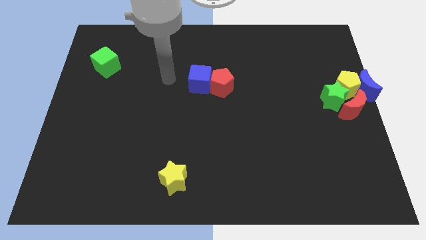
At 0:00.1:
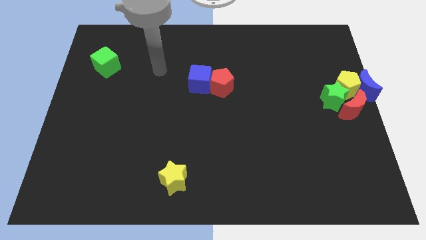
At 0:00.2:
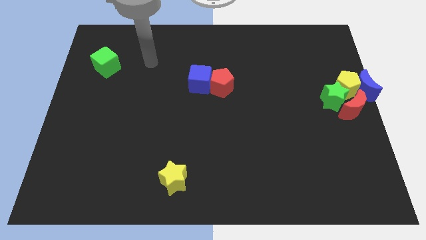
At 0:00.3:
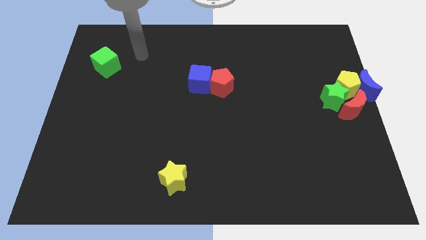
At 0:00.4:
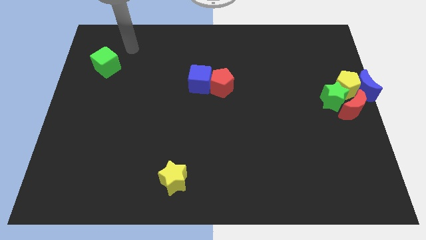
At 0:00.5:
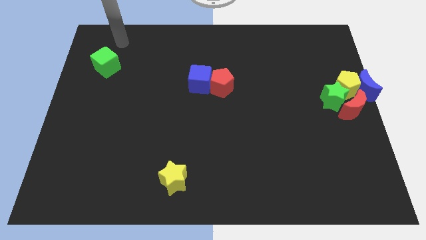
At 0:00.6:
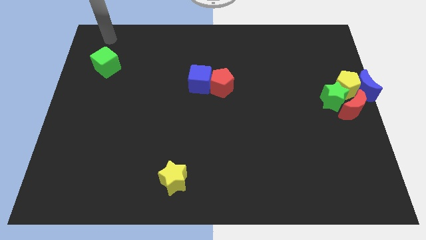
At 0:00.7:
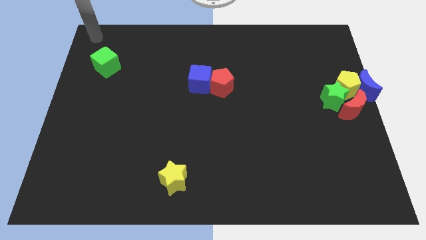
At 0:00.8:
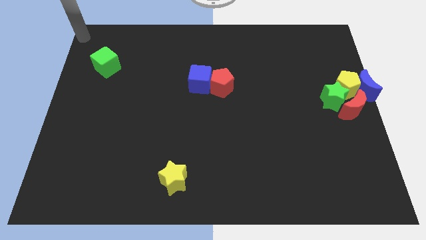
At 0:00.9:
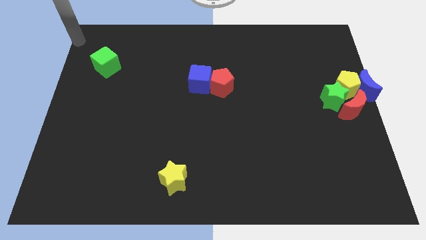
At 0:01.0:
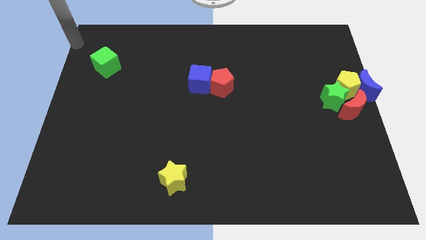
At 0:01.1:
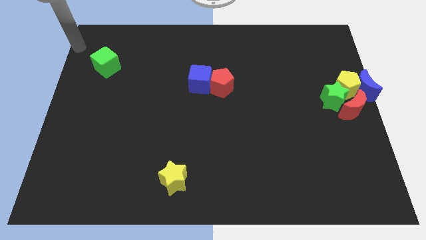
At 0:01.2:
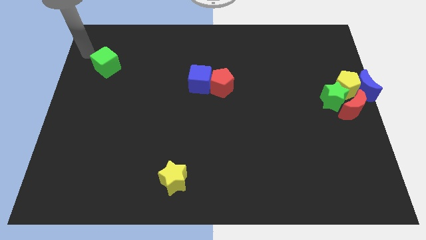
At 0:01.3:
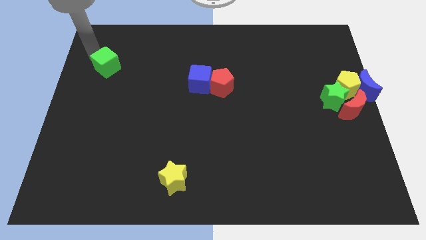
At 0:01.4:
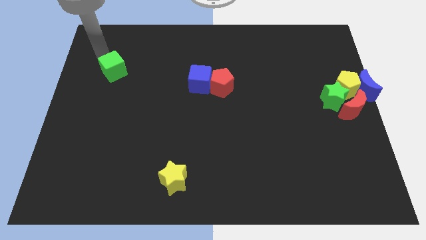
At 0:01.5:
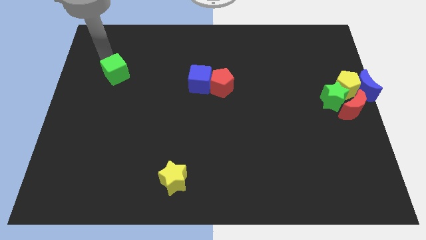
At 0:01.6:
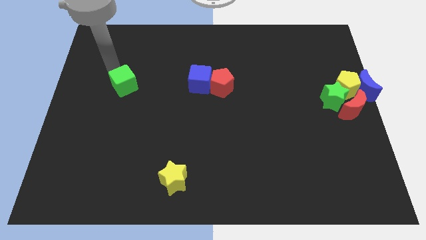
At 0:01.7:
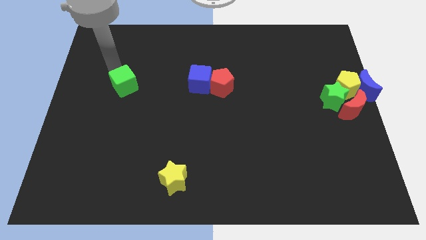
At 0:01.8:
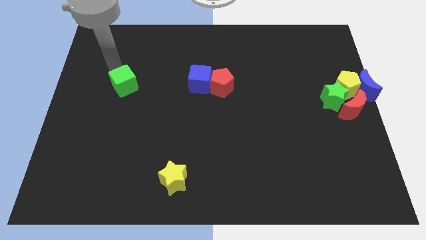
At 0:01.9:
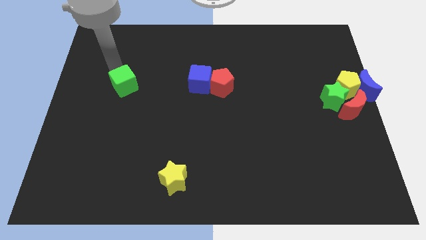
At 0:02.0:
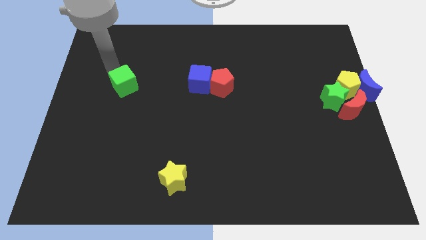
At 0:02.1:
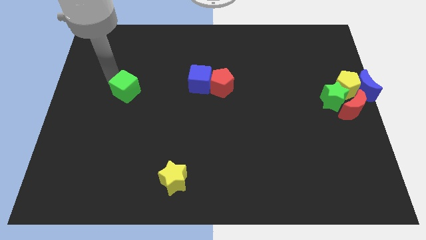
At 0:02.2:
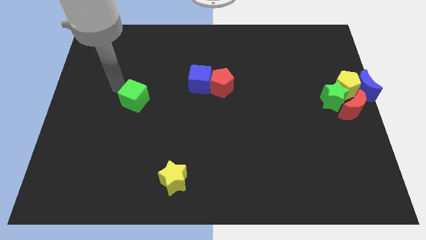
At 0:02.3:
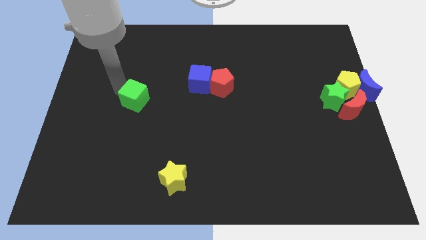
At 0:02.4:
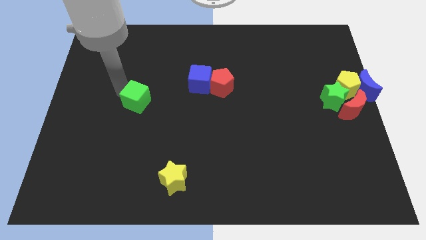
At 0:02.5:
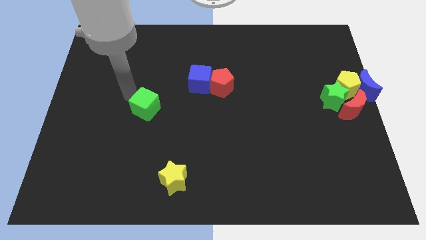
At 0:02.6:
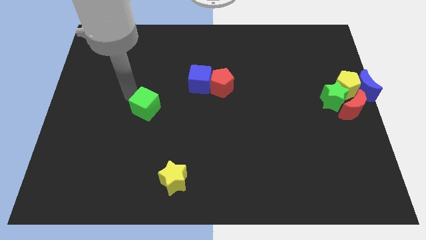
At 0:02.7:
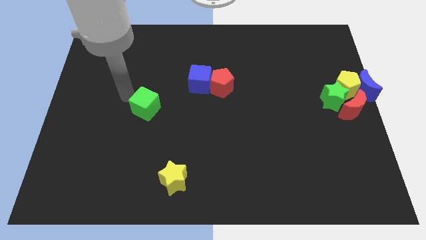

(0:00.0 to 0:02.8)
move the green cube diagonol to the blue cube

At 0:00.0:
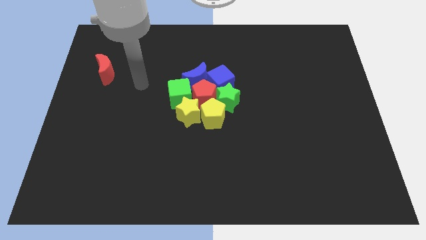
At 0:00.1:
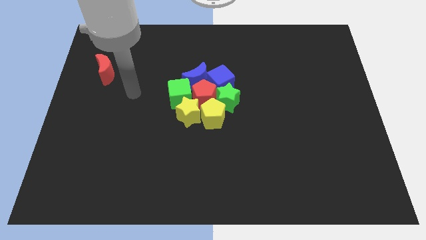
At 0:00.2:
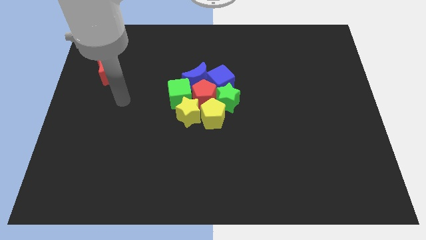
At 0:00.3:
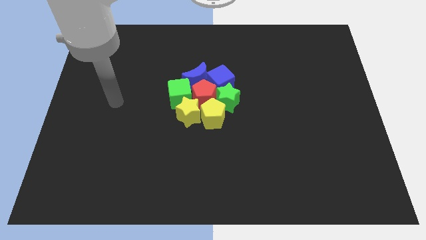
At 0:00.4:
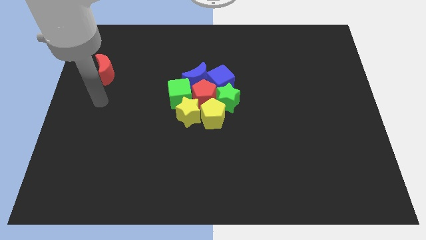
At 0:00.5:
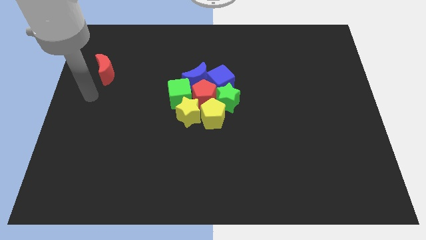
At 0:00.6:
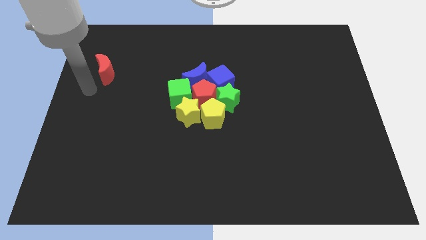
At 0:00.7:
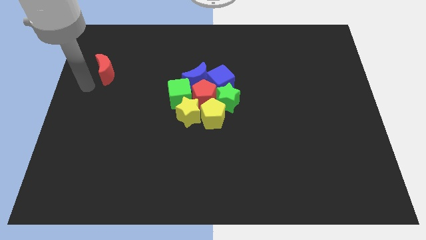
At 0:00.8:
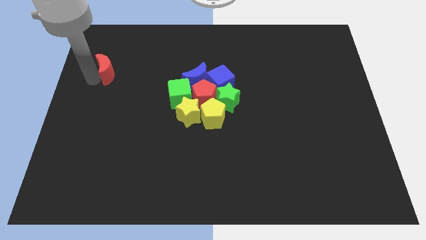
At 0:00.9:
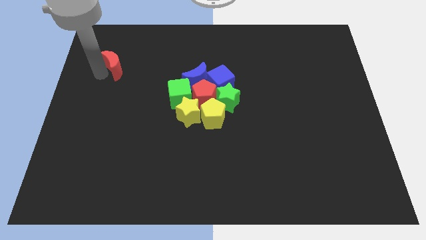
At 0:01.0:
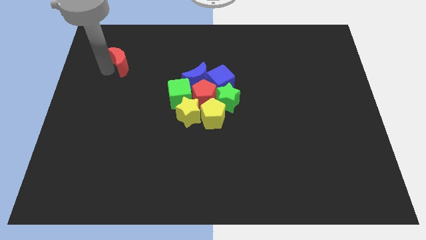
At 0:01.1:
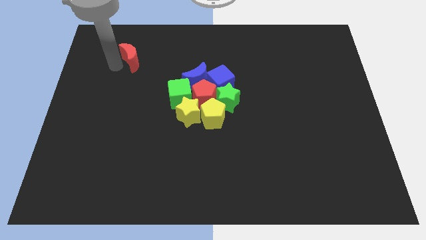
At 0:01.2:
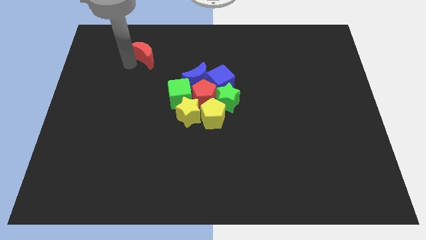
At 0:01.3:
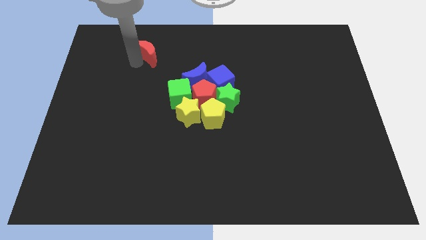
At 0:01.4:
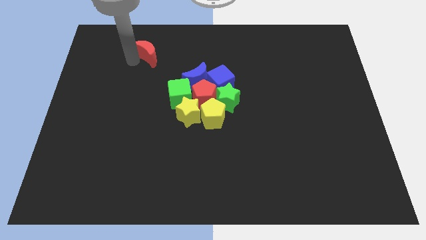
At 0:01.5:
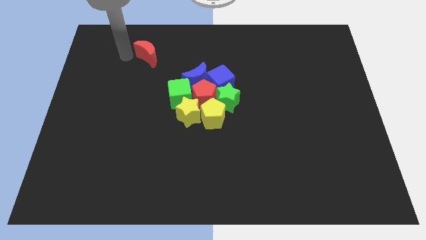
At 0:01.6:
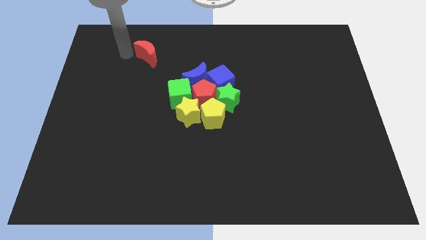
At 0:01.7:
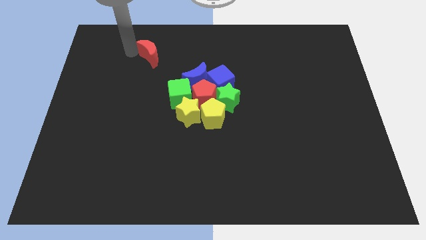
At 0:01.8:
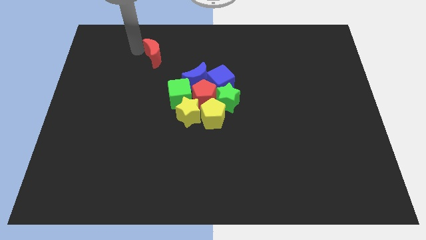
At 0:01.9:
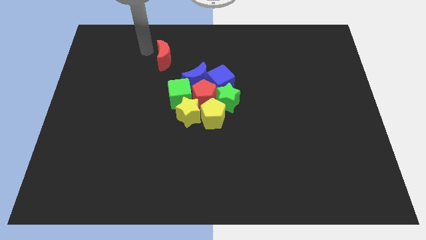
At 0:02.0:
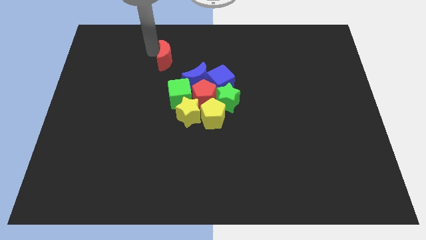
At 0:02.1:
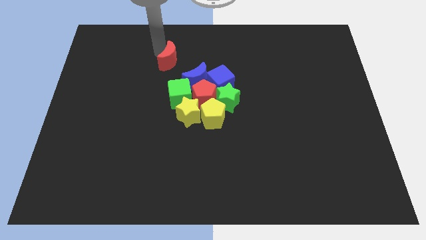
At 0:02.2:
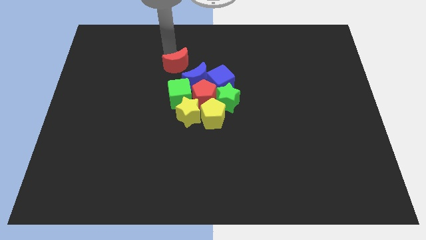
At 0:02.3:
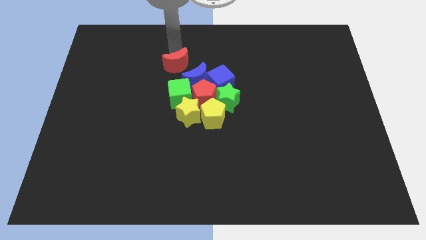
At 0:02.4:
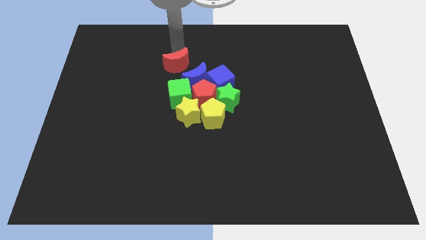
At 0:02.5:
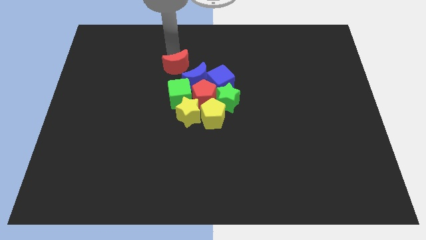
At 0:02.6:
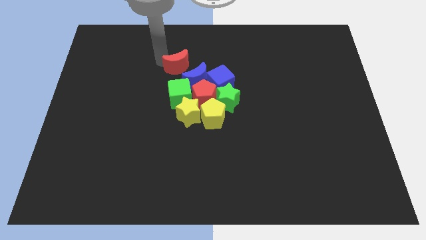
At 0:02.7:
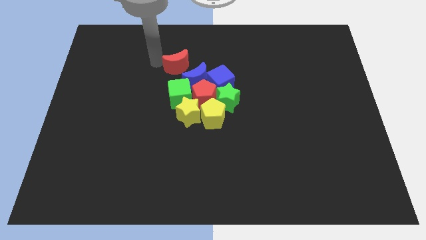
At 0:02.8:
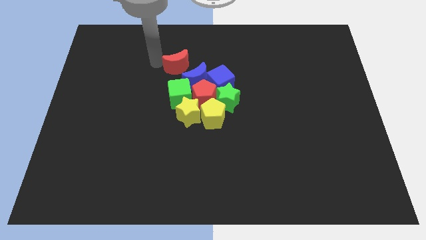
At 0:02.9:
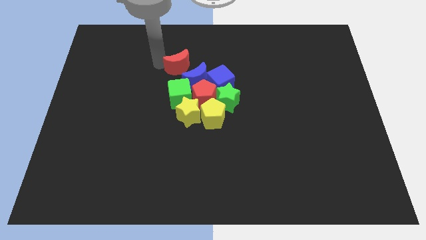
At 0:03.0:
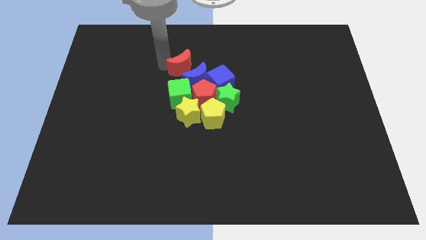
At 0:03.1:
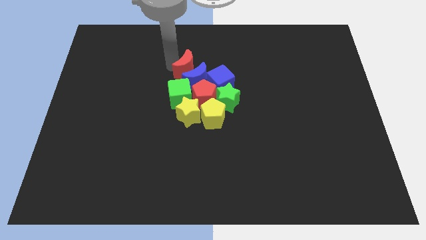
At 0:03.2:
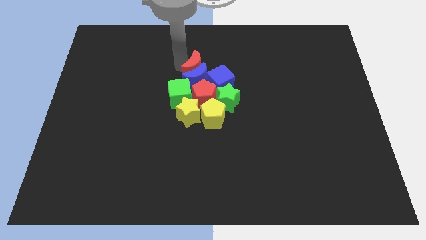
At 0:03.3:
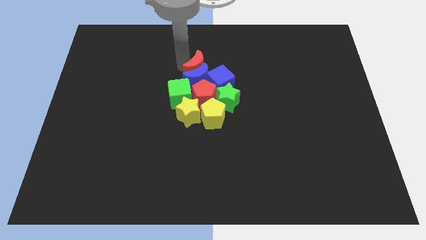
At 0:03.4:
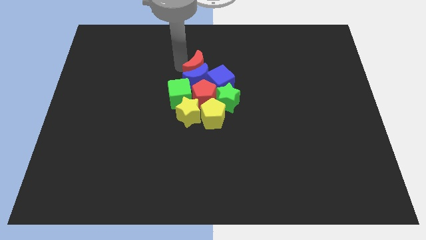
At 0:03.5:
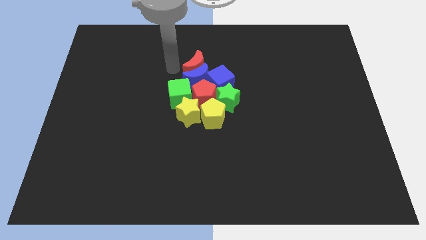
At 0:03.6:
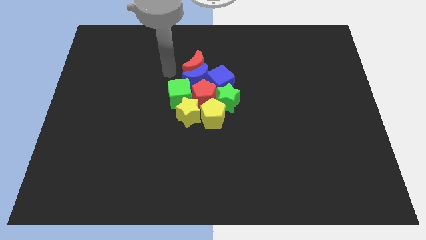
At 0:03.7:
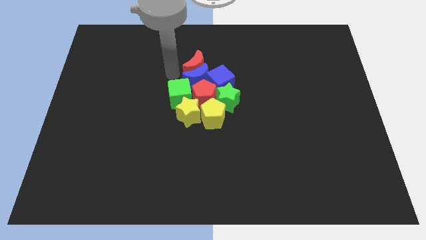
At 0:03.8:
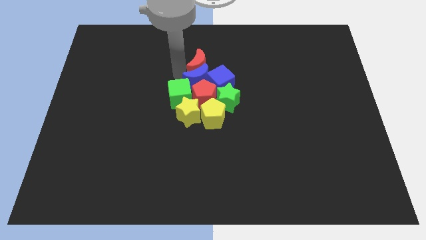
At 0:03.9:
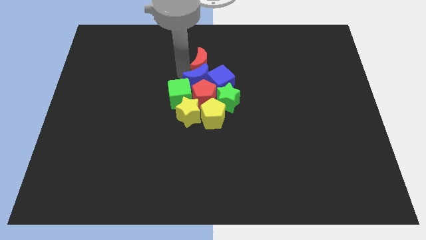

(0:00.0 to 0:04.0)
put the red moon above the blue moon

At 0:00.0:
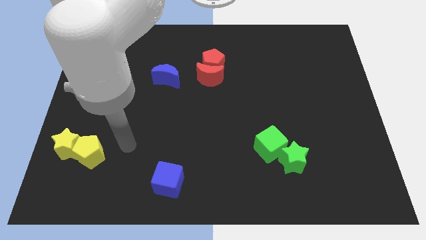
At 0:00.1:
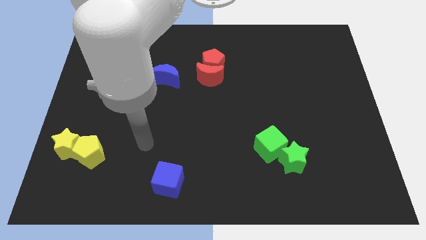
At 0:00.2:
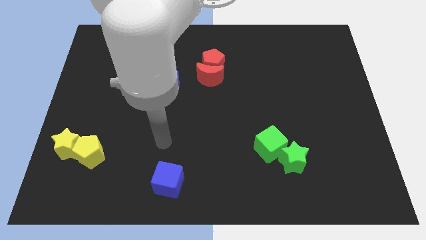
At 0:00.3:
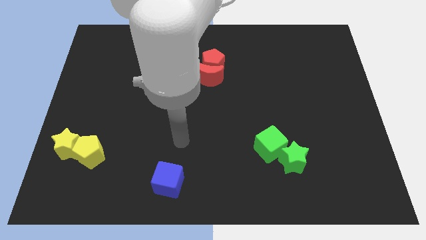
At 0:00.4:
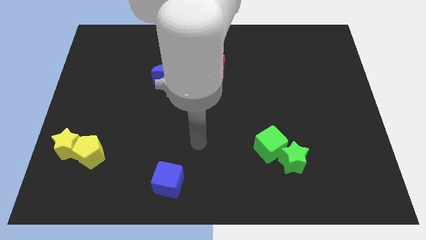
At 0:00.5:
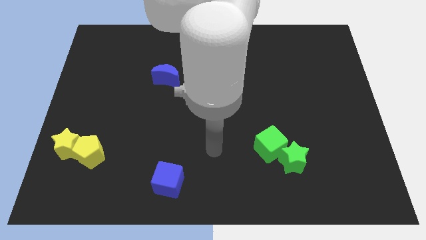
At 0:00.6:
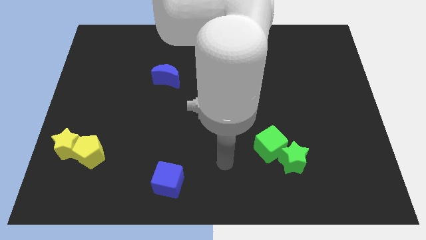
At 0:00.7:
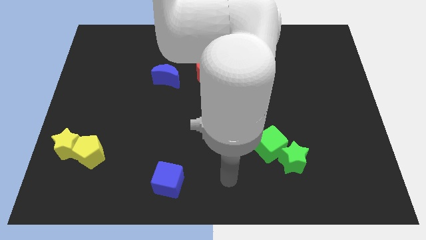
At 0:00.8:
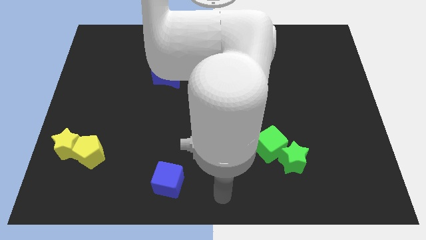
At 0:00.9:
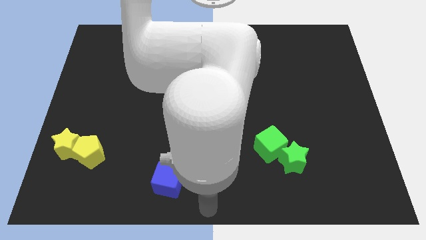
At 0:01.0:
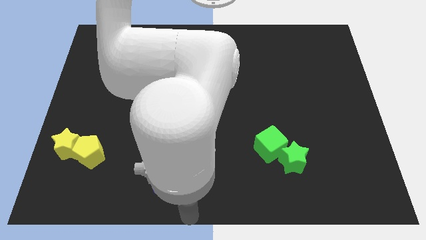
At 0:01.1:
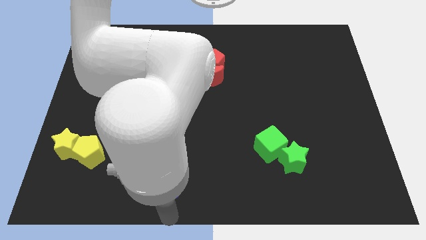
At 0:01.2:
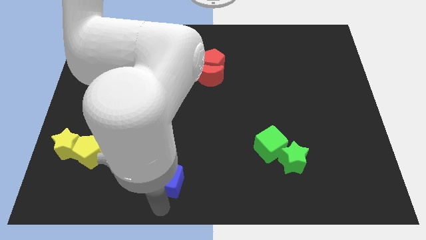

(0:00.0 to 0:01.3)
move your arm to the bottom side of the blue cube

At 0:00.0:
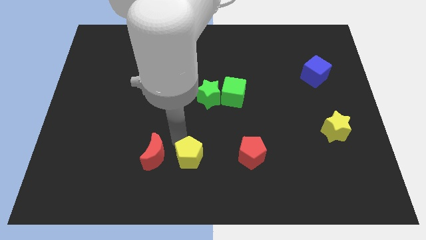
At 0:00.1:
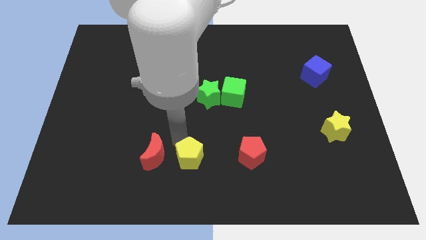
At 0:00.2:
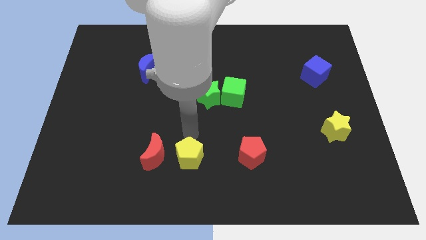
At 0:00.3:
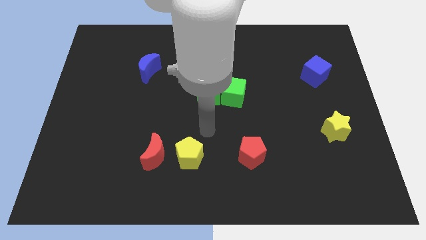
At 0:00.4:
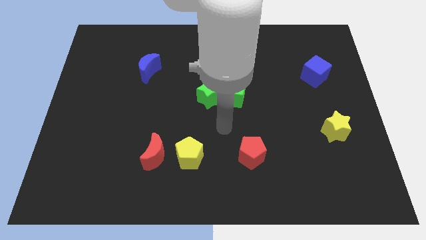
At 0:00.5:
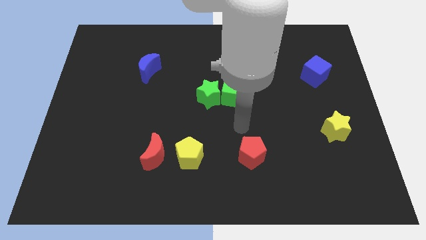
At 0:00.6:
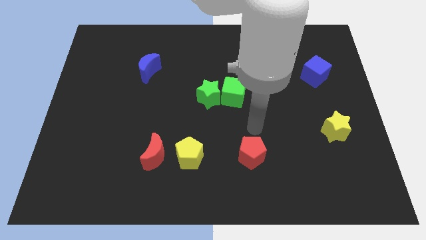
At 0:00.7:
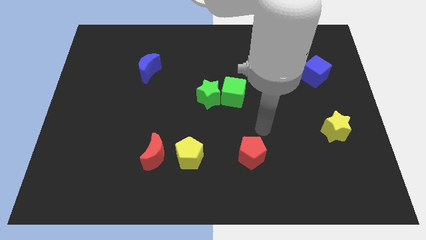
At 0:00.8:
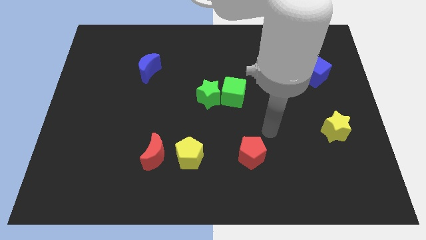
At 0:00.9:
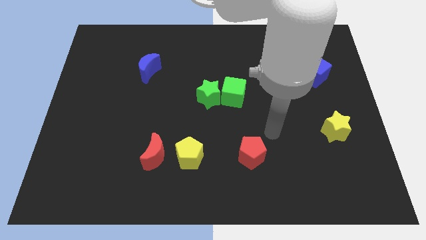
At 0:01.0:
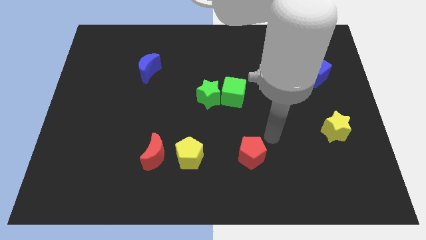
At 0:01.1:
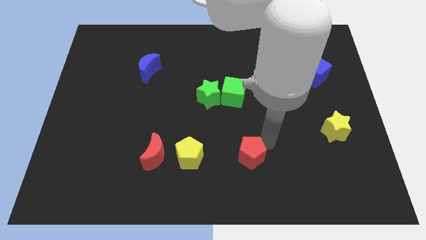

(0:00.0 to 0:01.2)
move your hand away from the yellow pentagon
